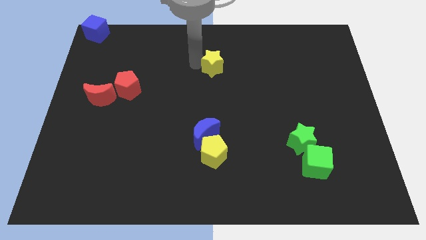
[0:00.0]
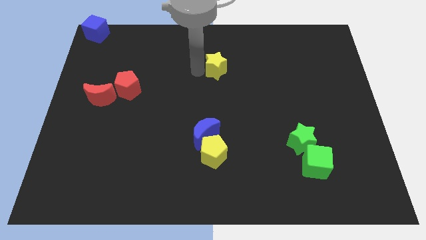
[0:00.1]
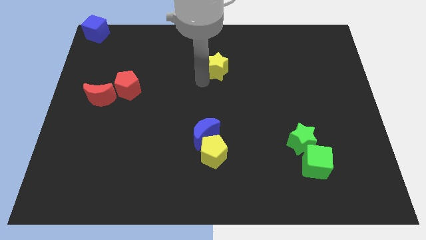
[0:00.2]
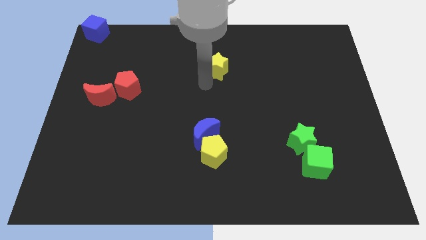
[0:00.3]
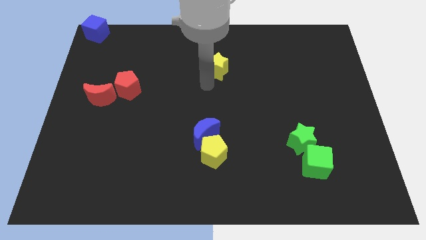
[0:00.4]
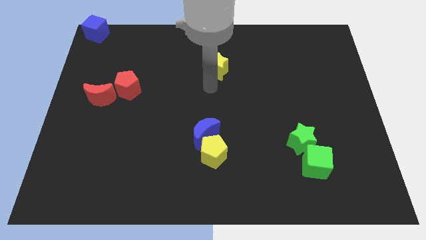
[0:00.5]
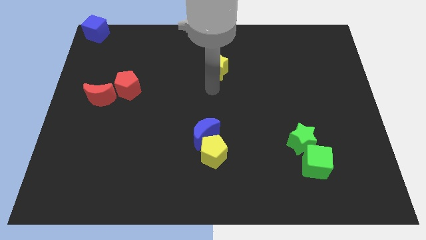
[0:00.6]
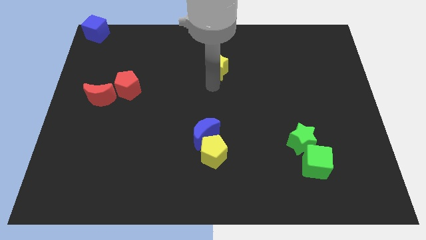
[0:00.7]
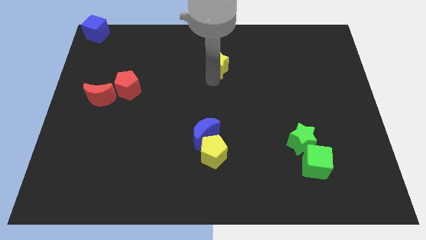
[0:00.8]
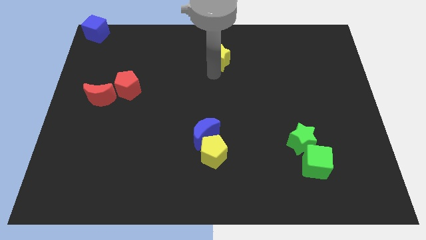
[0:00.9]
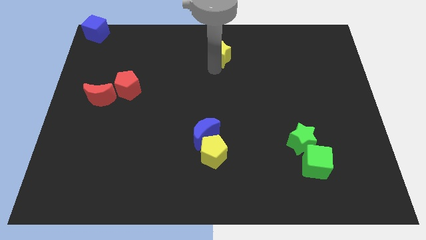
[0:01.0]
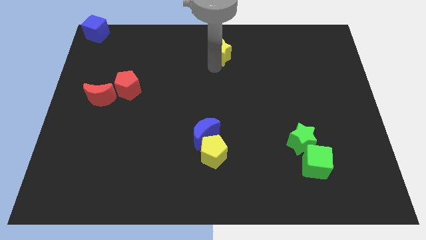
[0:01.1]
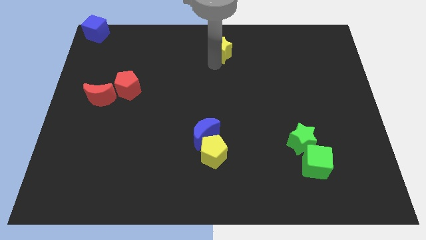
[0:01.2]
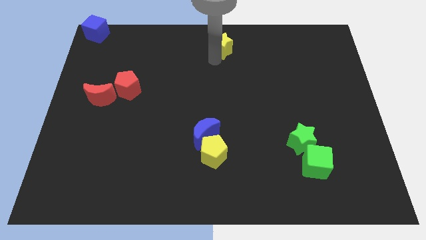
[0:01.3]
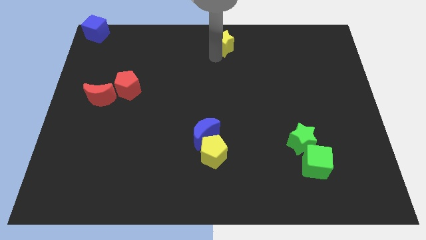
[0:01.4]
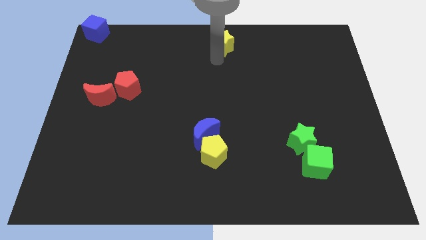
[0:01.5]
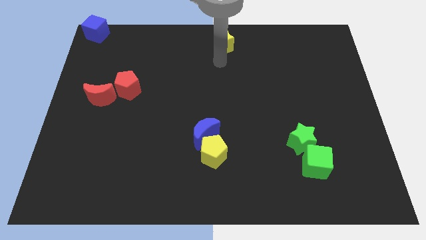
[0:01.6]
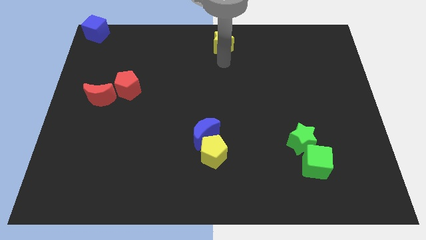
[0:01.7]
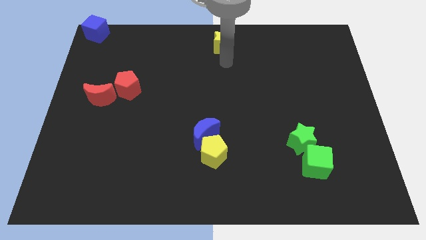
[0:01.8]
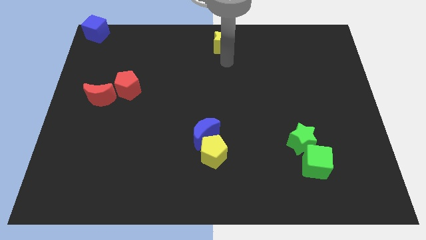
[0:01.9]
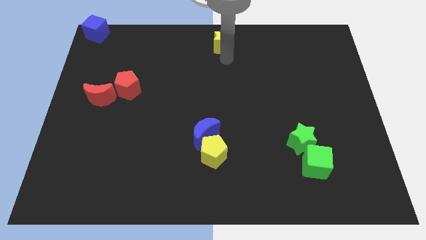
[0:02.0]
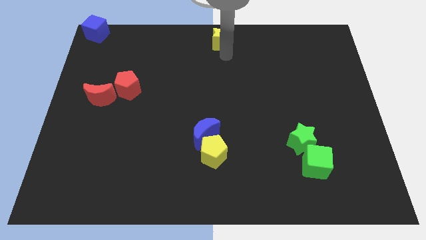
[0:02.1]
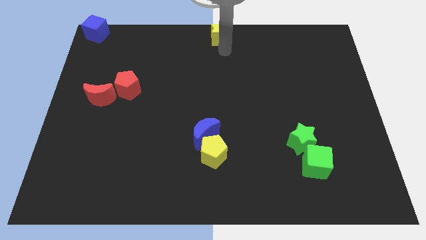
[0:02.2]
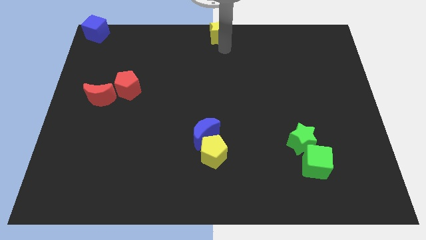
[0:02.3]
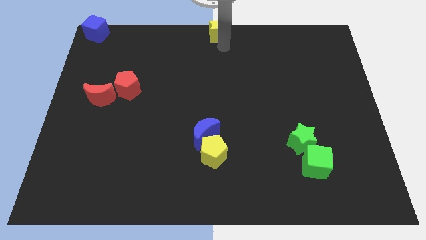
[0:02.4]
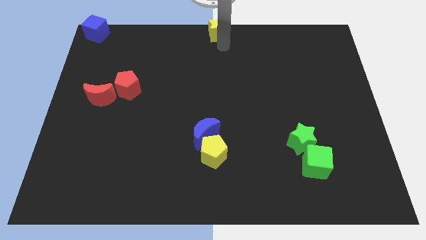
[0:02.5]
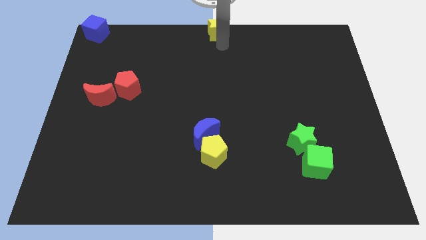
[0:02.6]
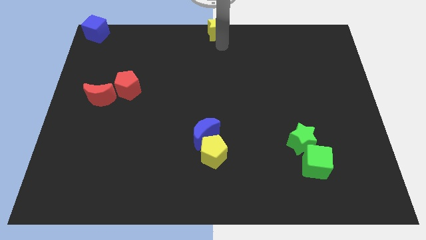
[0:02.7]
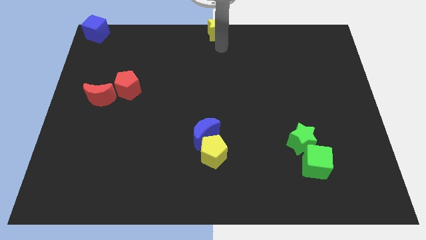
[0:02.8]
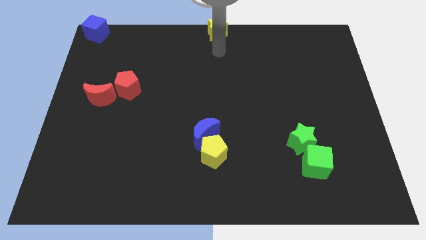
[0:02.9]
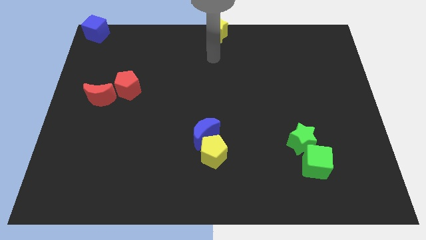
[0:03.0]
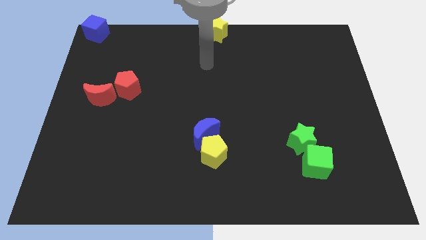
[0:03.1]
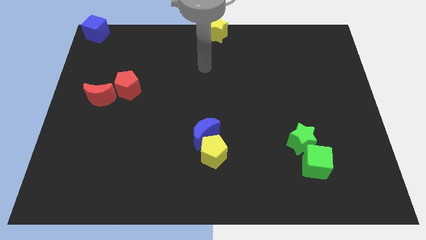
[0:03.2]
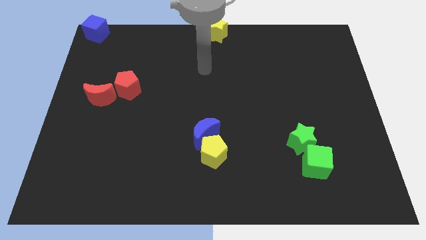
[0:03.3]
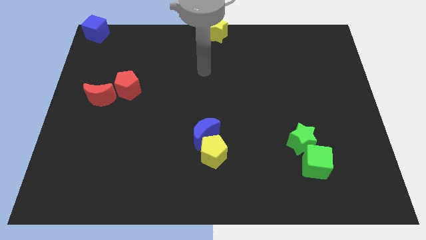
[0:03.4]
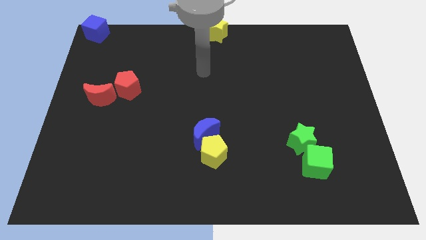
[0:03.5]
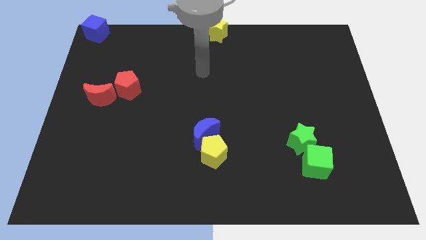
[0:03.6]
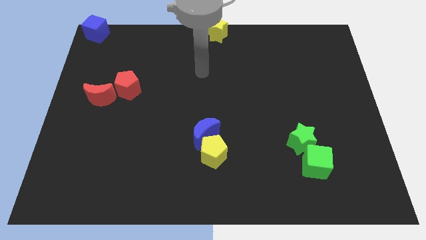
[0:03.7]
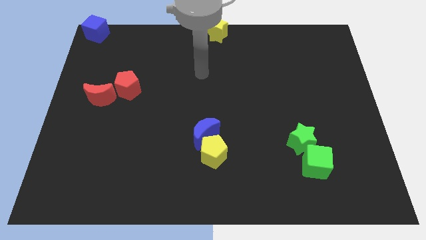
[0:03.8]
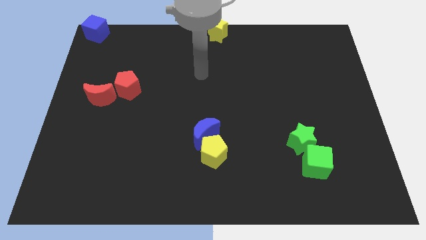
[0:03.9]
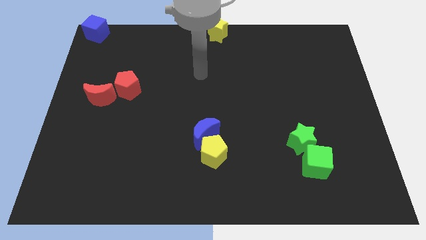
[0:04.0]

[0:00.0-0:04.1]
place the yellow star at the top centre of the board

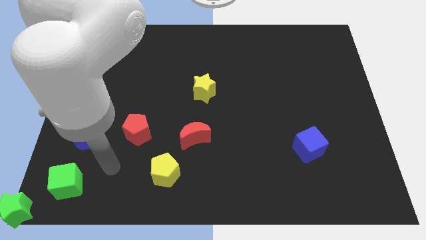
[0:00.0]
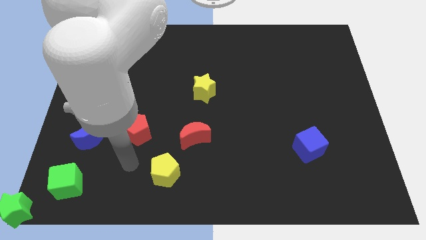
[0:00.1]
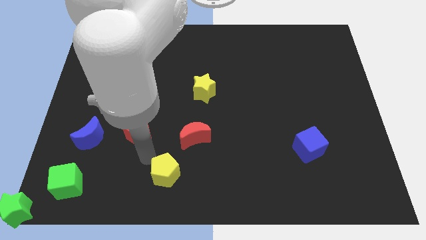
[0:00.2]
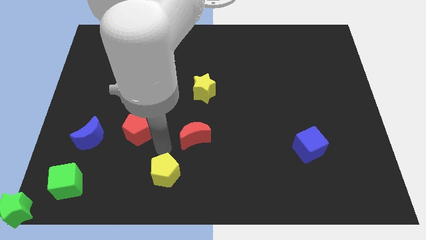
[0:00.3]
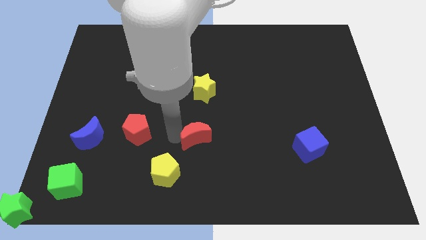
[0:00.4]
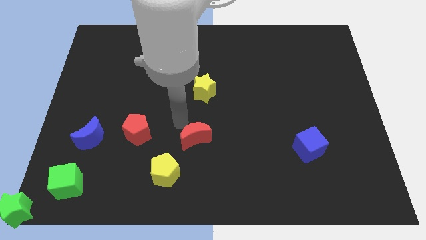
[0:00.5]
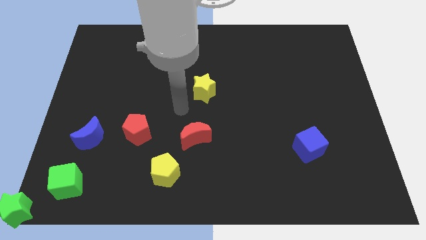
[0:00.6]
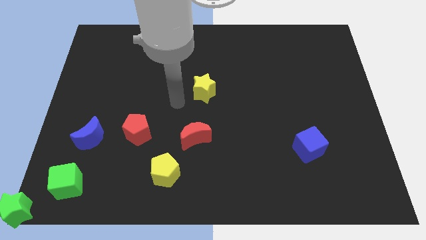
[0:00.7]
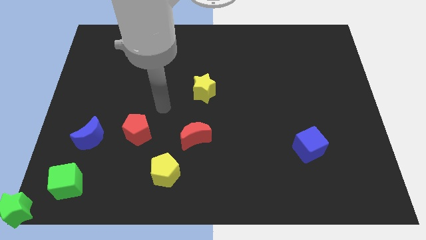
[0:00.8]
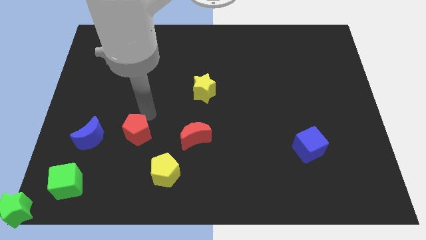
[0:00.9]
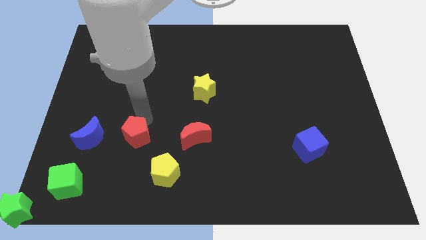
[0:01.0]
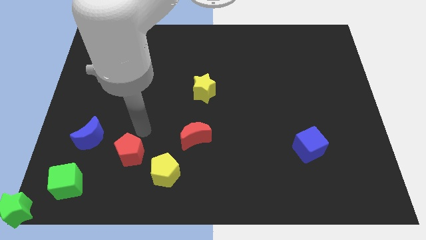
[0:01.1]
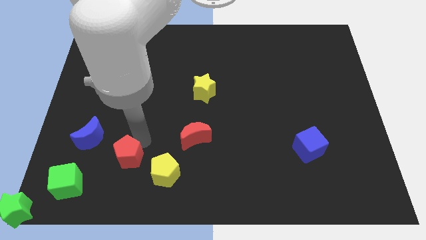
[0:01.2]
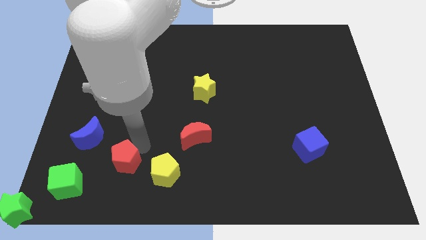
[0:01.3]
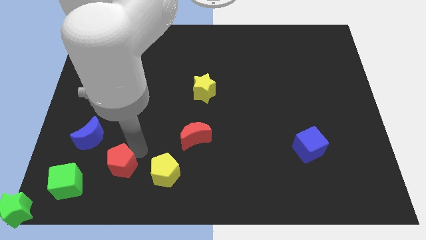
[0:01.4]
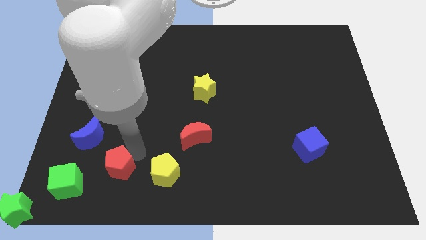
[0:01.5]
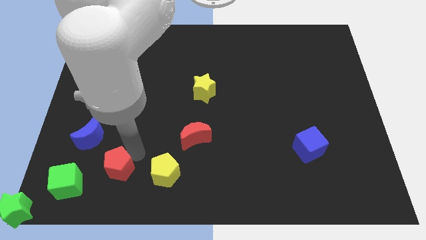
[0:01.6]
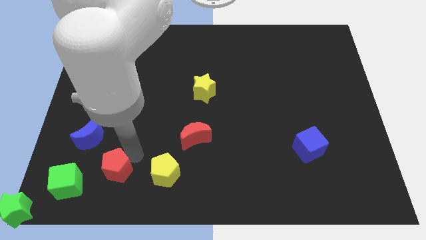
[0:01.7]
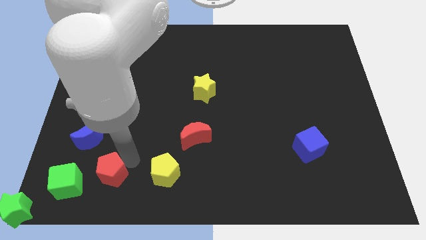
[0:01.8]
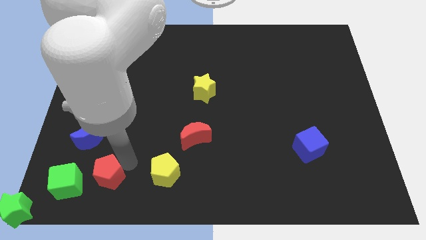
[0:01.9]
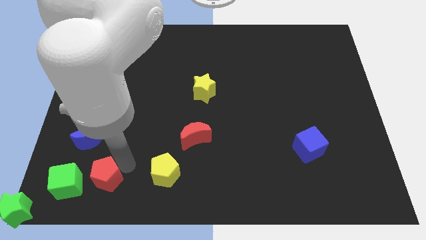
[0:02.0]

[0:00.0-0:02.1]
move the red pentagon between yellow pentagon and green cube

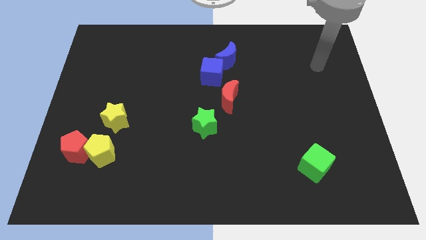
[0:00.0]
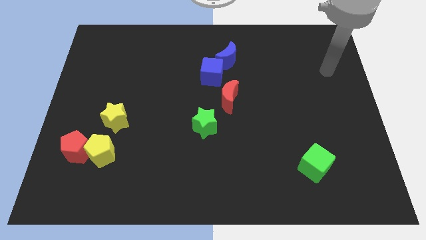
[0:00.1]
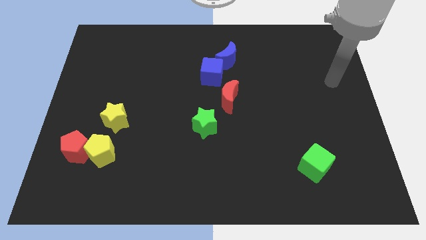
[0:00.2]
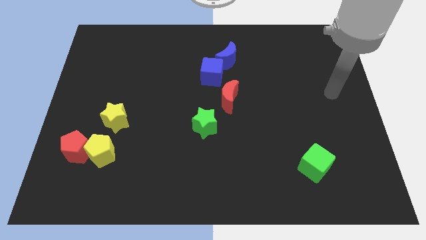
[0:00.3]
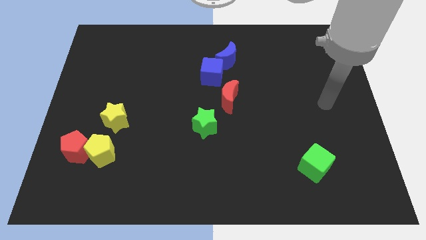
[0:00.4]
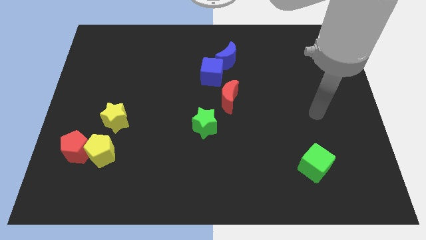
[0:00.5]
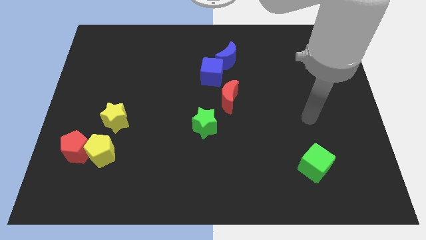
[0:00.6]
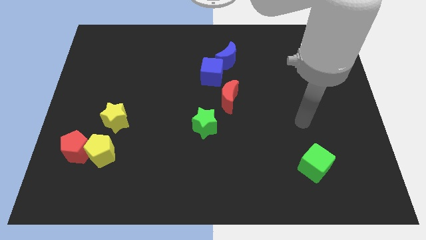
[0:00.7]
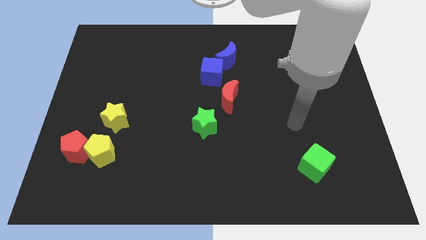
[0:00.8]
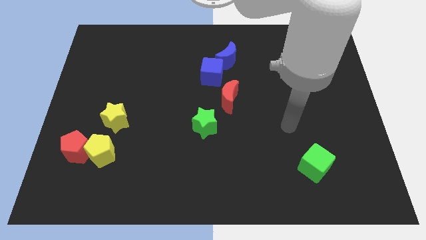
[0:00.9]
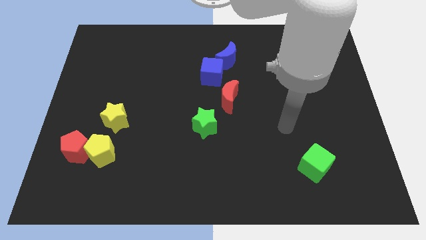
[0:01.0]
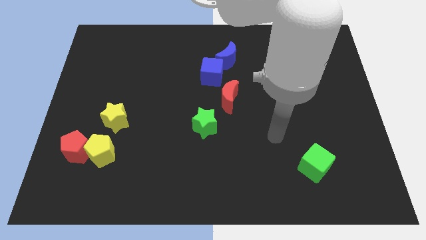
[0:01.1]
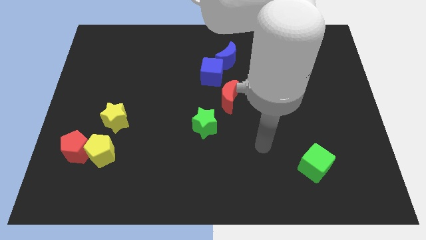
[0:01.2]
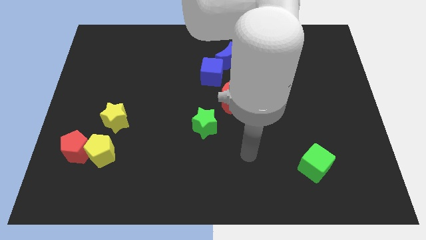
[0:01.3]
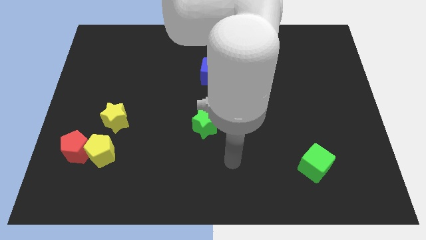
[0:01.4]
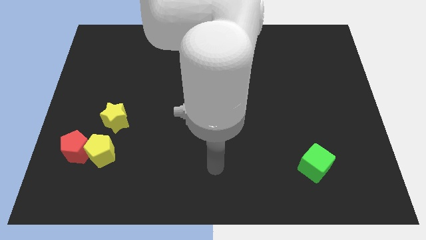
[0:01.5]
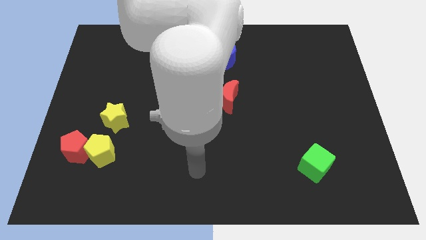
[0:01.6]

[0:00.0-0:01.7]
point the arm vertically below the green star

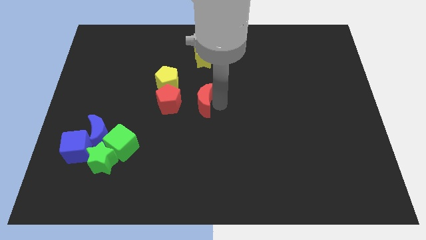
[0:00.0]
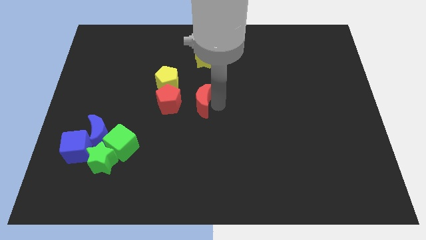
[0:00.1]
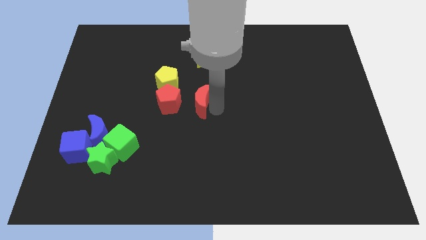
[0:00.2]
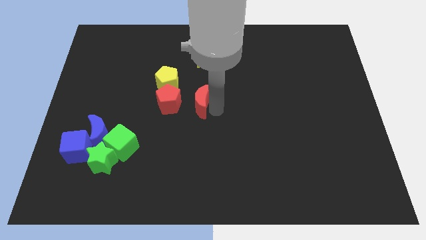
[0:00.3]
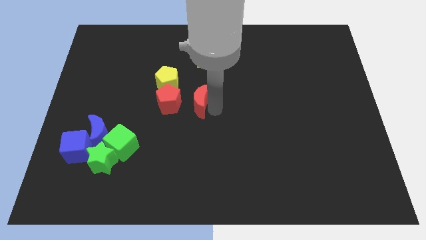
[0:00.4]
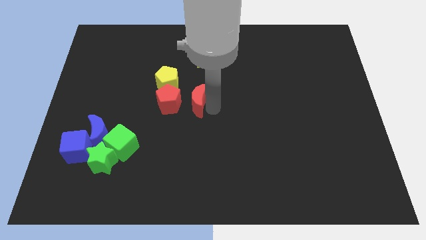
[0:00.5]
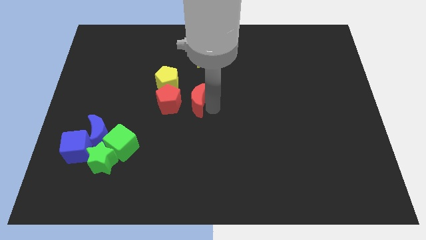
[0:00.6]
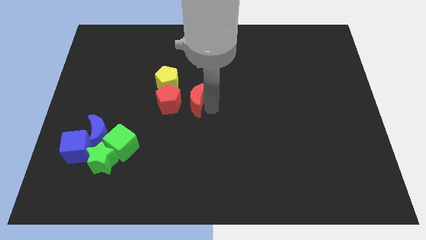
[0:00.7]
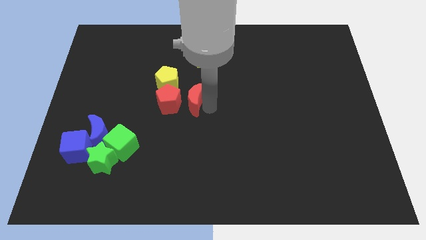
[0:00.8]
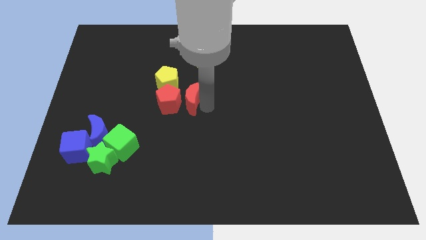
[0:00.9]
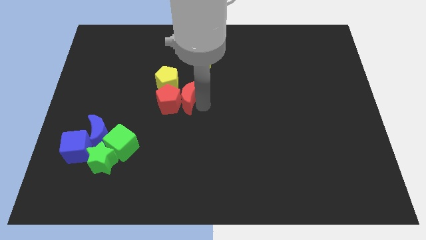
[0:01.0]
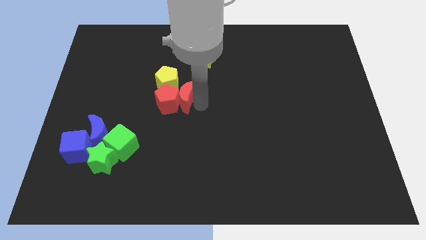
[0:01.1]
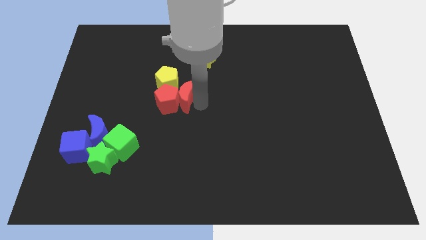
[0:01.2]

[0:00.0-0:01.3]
push the red crescent into the red pentagon towards the left center of the board
